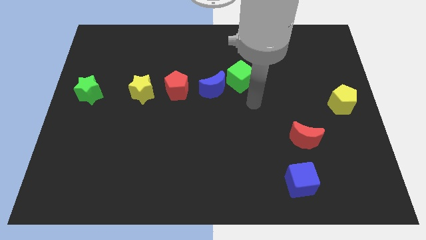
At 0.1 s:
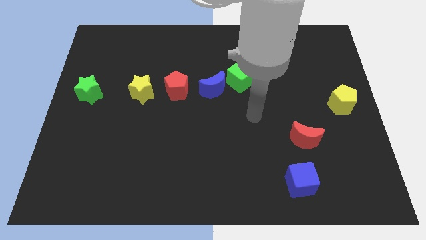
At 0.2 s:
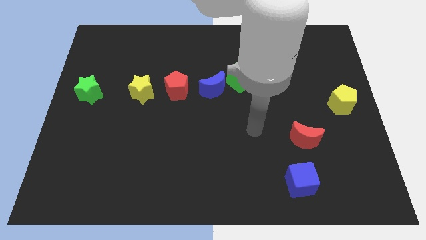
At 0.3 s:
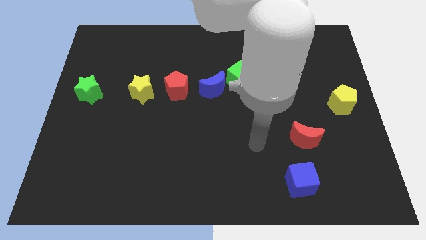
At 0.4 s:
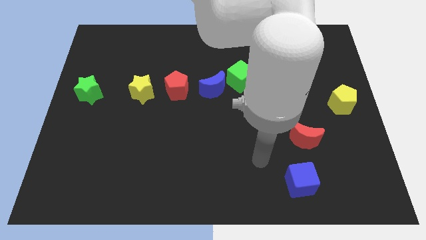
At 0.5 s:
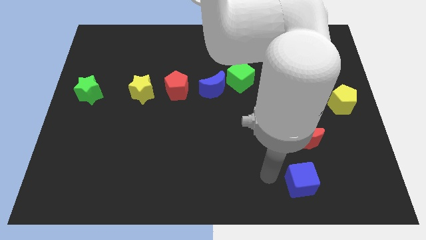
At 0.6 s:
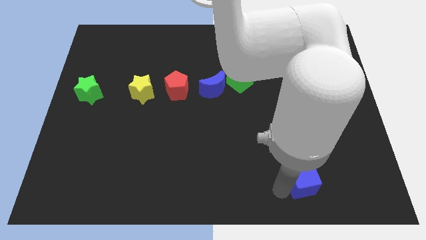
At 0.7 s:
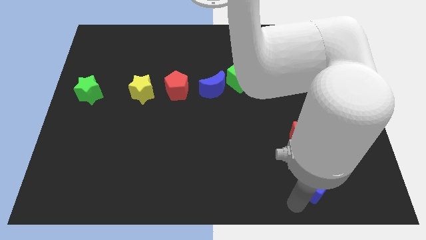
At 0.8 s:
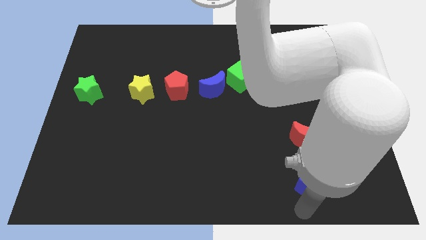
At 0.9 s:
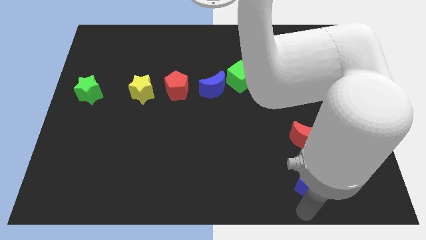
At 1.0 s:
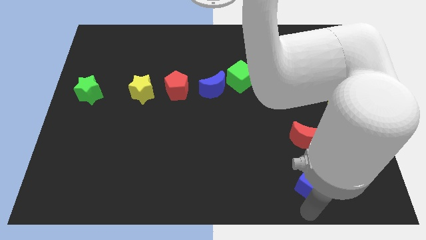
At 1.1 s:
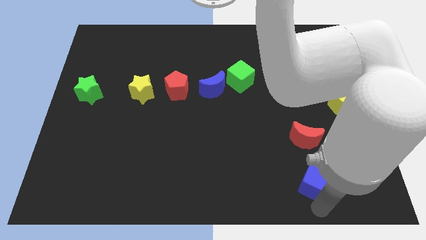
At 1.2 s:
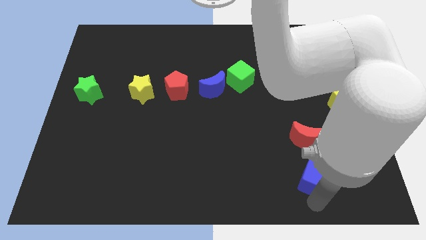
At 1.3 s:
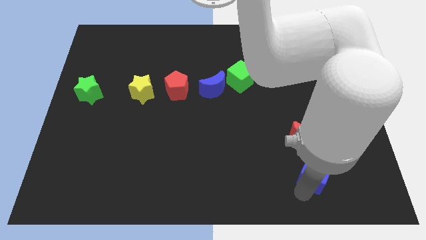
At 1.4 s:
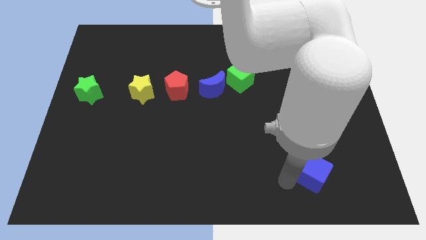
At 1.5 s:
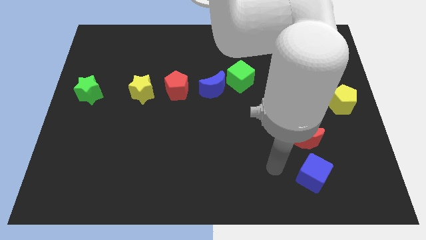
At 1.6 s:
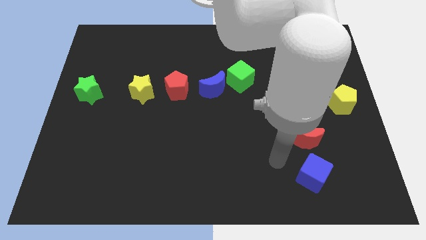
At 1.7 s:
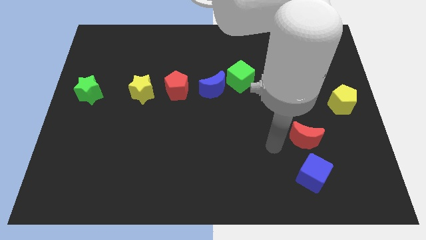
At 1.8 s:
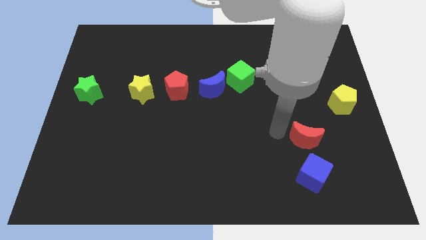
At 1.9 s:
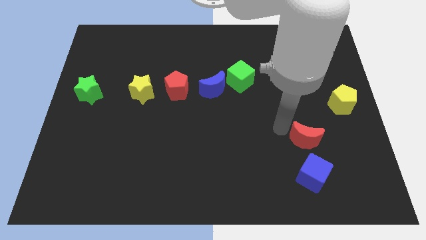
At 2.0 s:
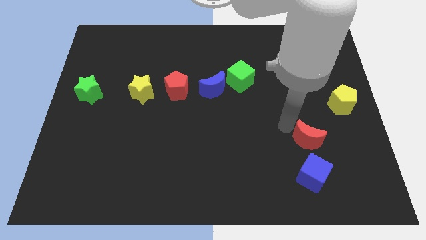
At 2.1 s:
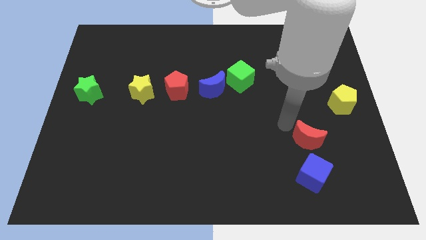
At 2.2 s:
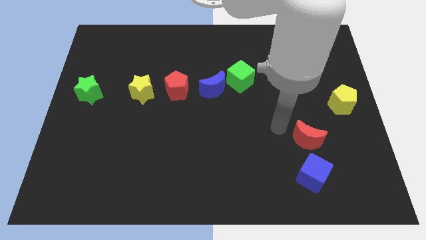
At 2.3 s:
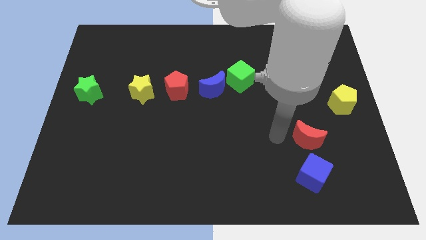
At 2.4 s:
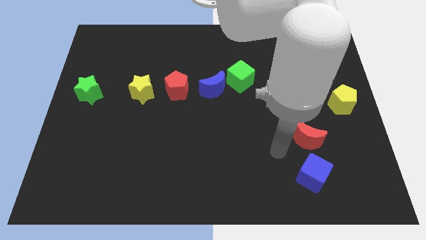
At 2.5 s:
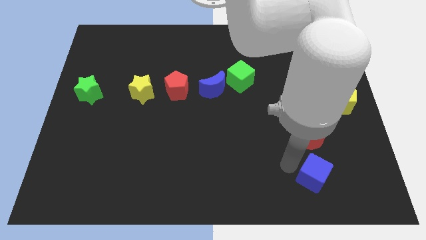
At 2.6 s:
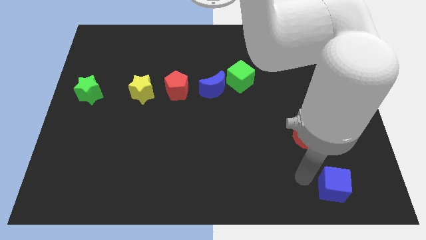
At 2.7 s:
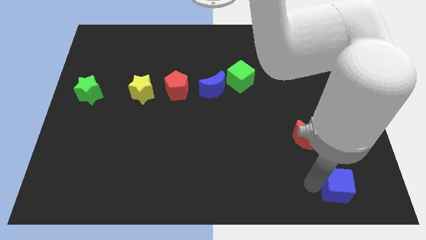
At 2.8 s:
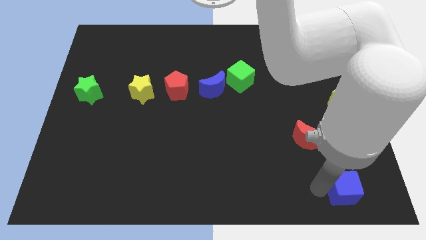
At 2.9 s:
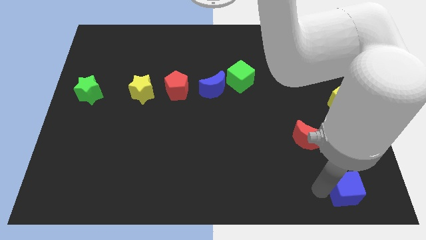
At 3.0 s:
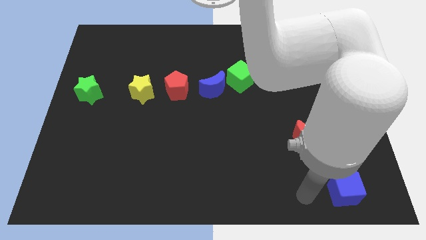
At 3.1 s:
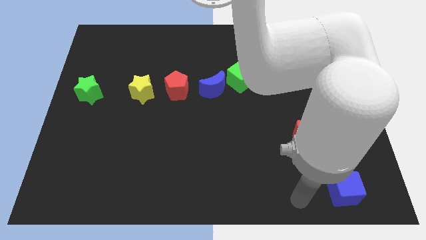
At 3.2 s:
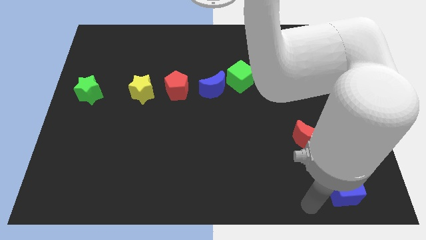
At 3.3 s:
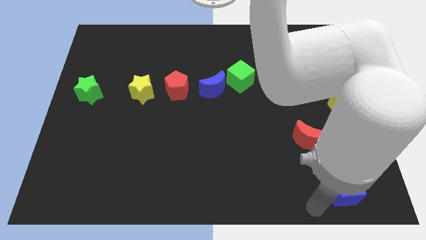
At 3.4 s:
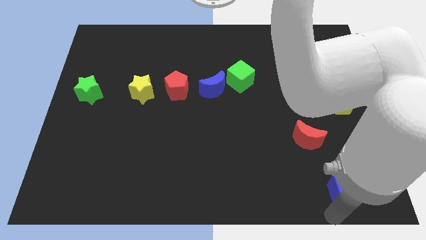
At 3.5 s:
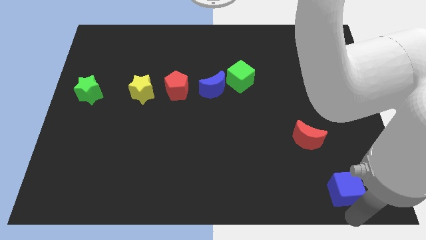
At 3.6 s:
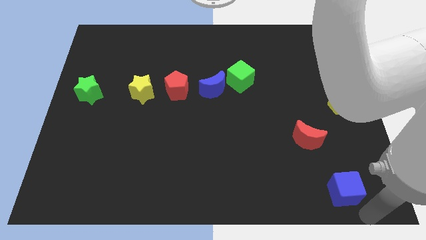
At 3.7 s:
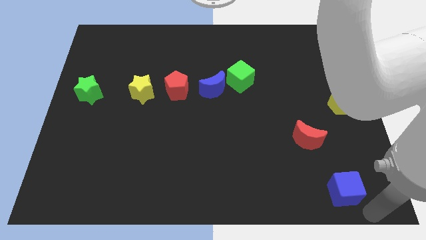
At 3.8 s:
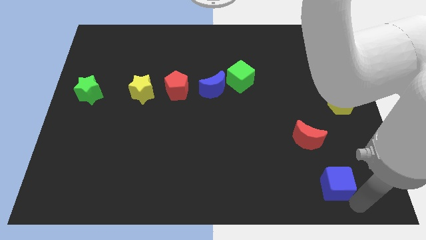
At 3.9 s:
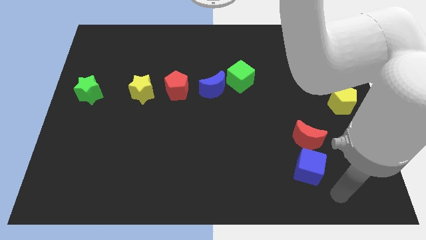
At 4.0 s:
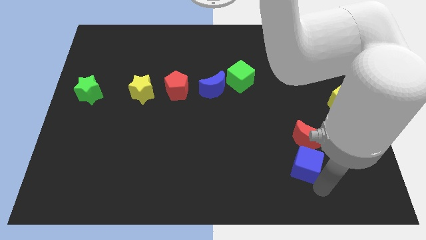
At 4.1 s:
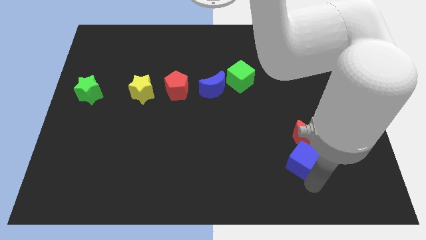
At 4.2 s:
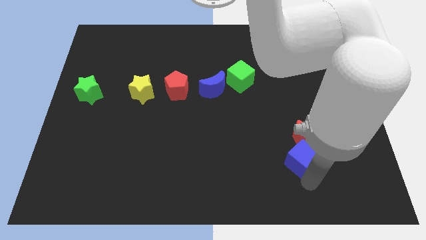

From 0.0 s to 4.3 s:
push the blue cube into the red crescent

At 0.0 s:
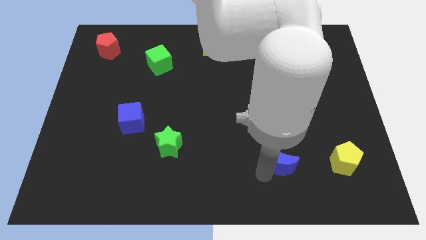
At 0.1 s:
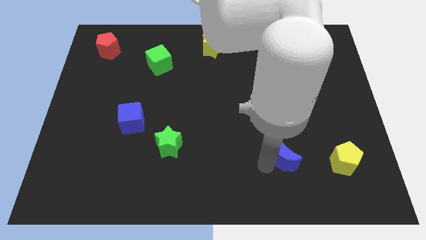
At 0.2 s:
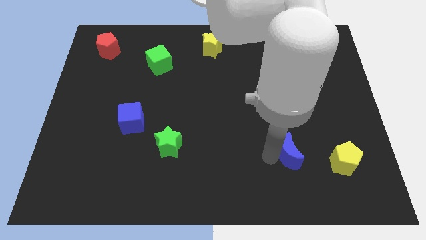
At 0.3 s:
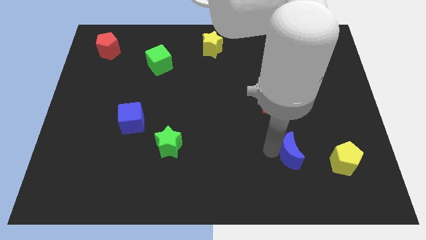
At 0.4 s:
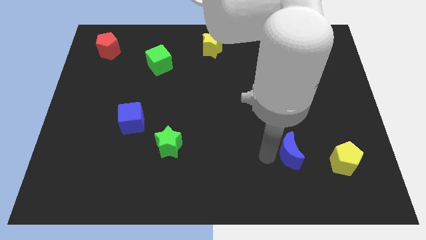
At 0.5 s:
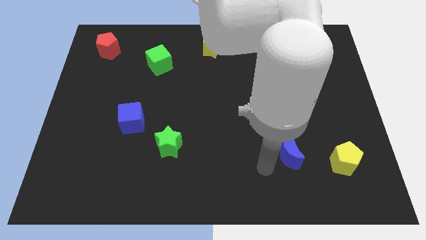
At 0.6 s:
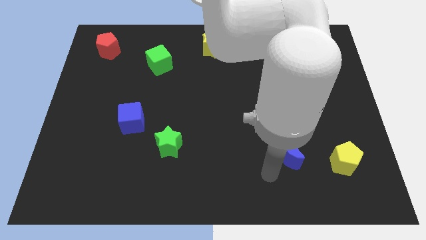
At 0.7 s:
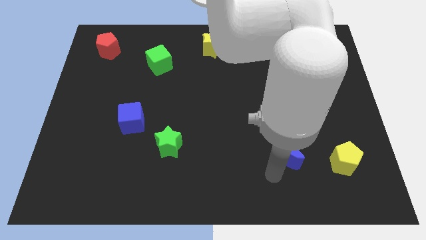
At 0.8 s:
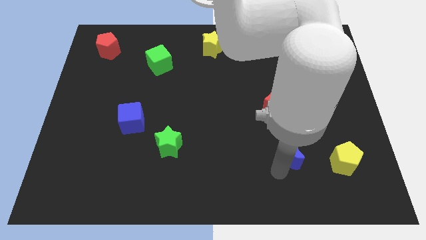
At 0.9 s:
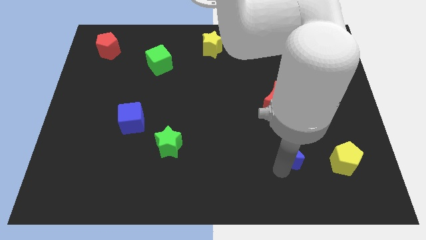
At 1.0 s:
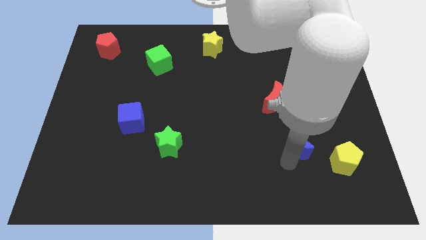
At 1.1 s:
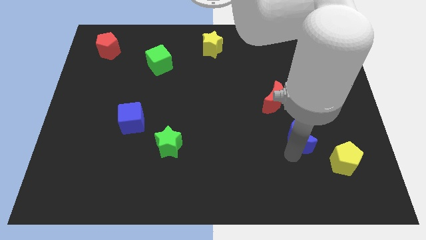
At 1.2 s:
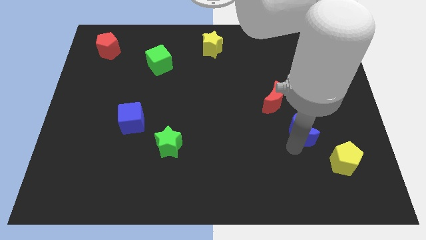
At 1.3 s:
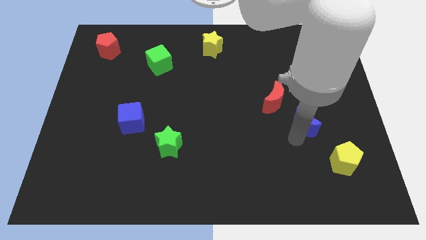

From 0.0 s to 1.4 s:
push the blue crescent slightly to the top

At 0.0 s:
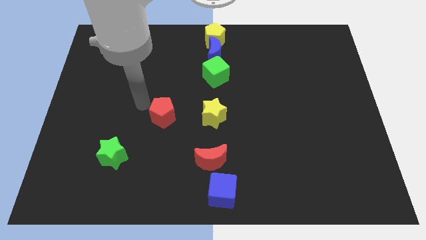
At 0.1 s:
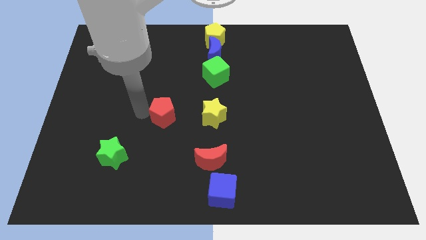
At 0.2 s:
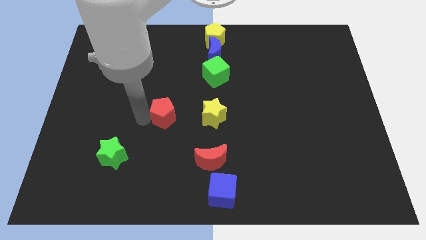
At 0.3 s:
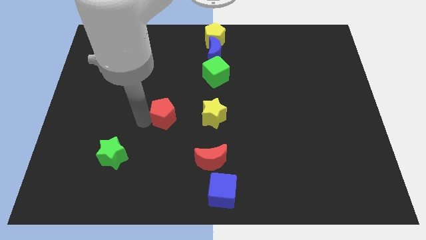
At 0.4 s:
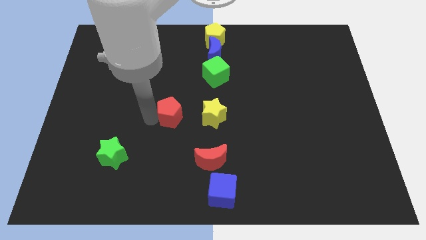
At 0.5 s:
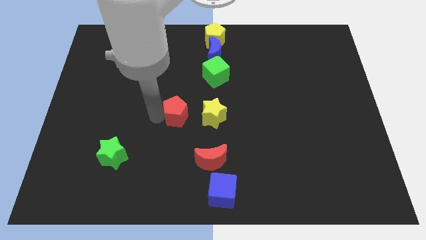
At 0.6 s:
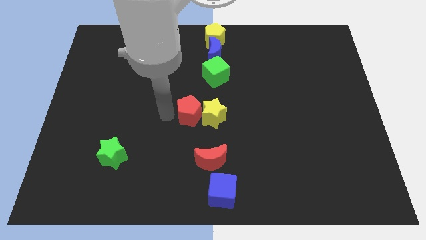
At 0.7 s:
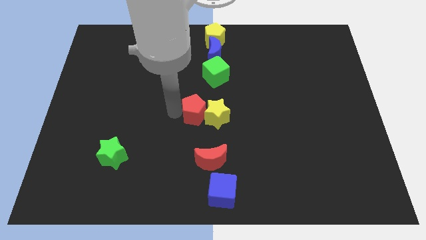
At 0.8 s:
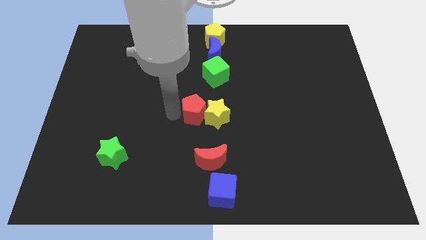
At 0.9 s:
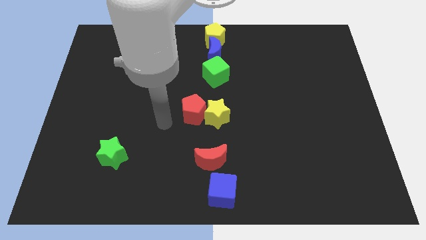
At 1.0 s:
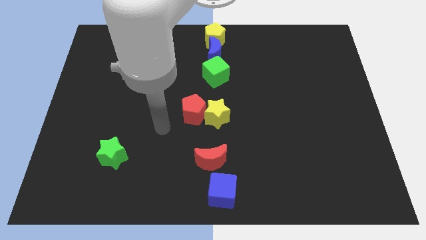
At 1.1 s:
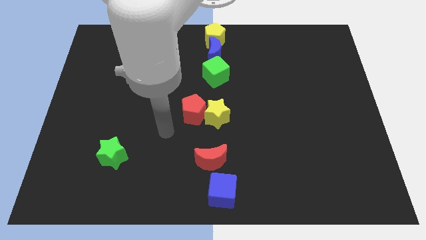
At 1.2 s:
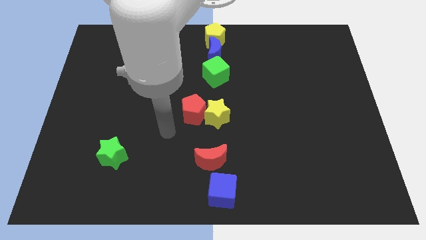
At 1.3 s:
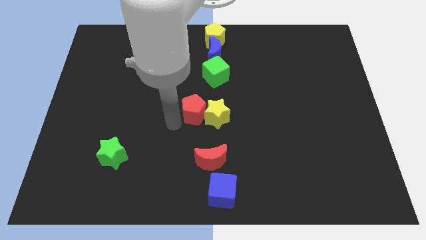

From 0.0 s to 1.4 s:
push the red pentagon into the yellow star

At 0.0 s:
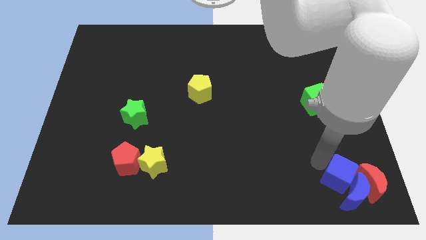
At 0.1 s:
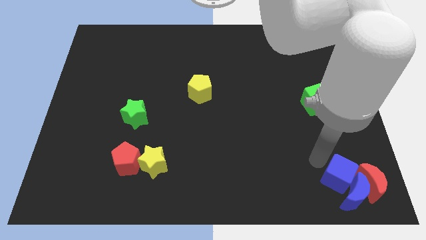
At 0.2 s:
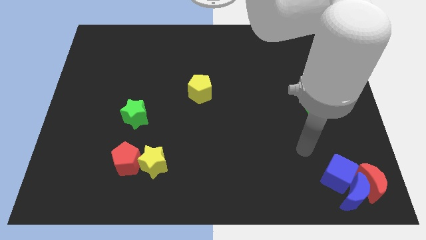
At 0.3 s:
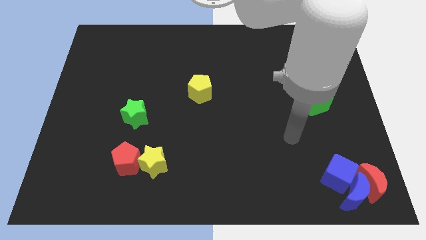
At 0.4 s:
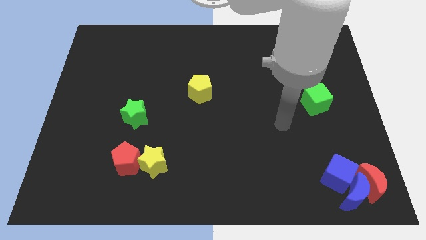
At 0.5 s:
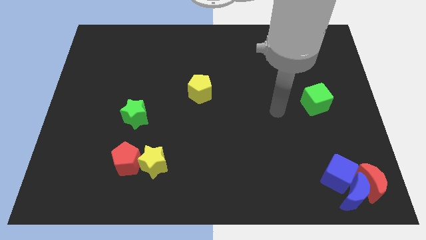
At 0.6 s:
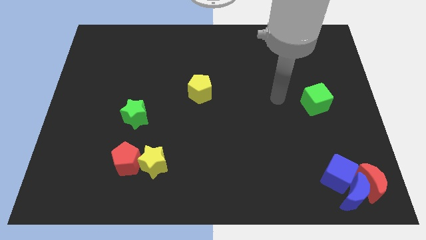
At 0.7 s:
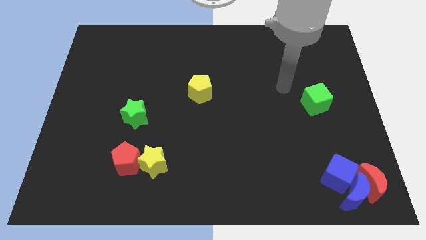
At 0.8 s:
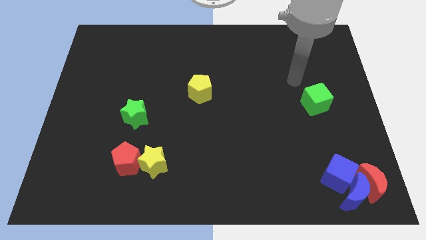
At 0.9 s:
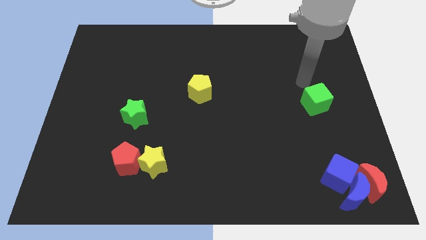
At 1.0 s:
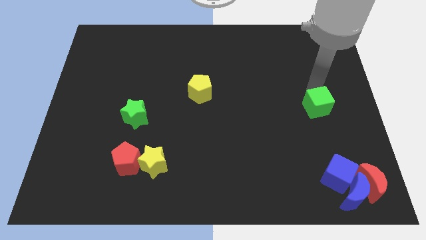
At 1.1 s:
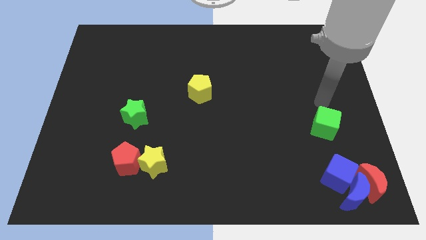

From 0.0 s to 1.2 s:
place the arm above the green cube

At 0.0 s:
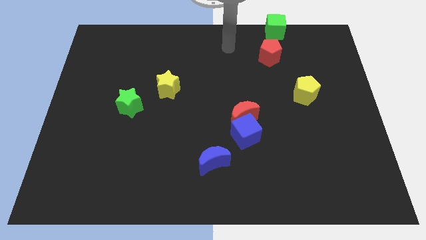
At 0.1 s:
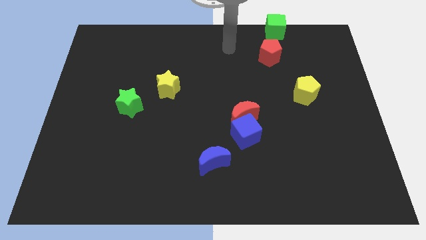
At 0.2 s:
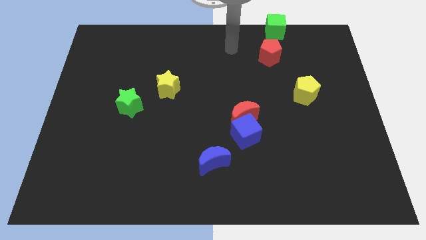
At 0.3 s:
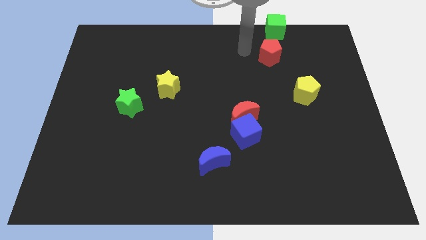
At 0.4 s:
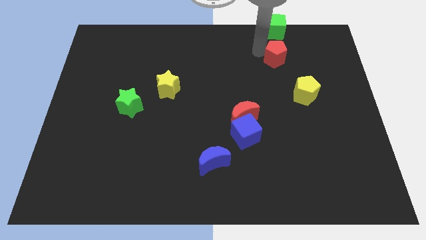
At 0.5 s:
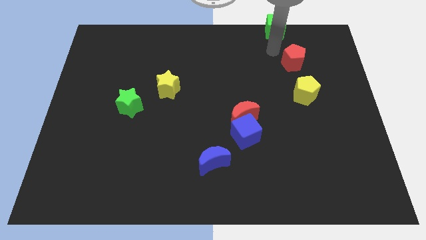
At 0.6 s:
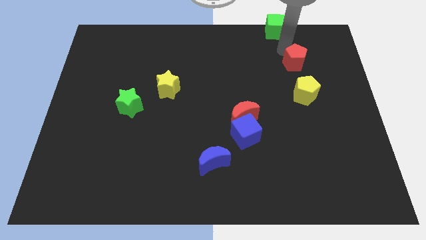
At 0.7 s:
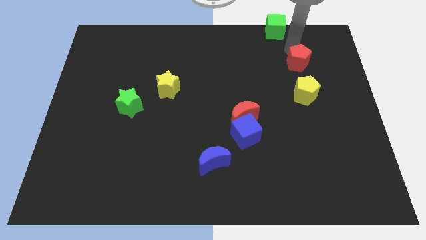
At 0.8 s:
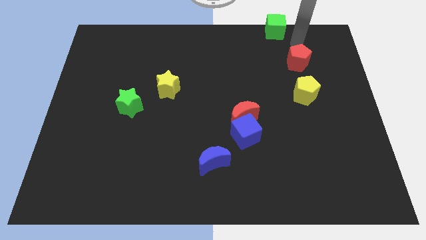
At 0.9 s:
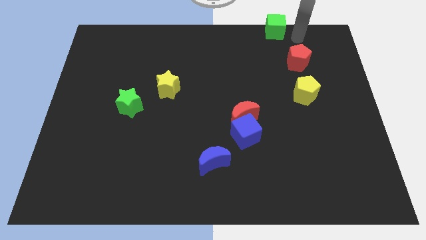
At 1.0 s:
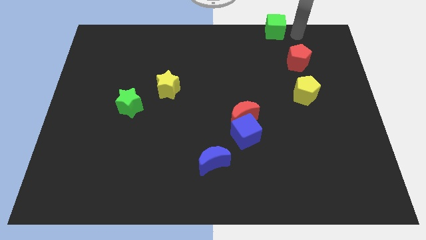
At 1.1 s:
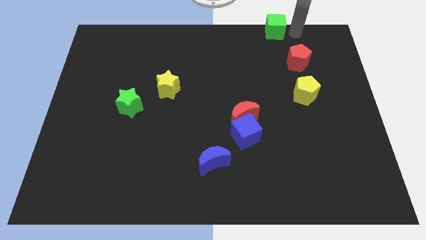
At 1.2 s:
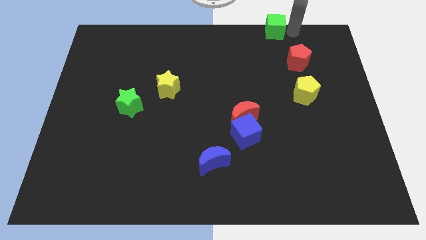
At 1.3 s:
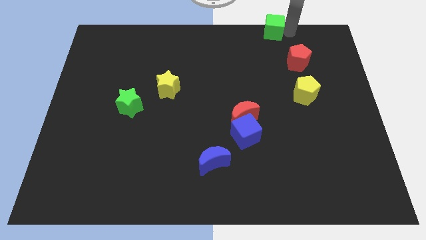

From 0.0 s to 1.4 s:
push the red pentagon above the yellow pentagon
